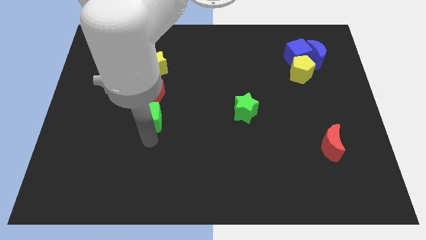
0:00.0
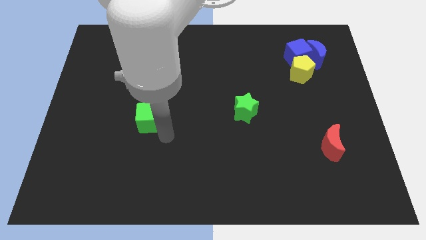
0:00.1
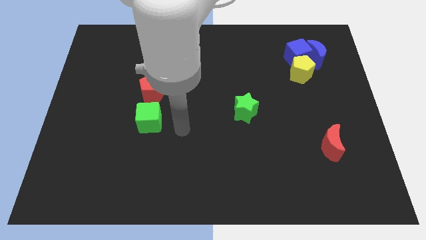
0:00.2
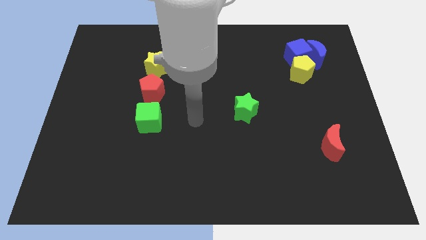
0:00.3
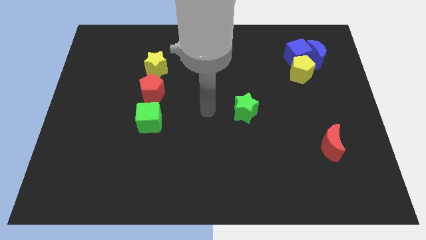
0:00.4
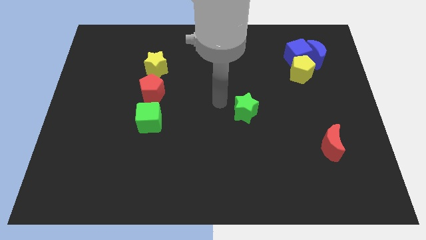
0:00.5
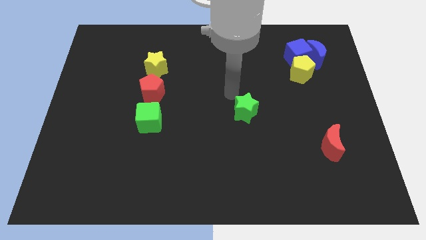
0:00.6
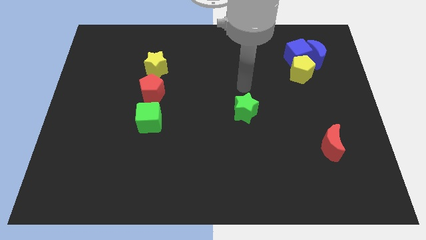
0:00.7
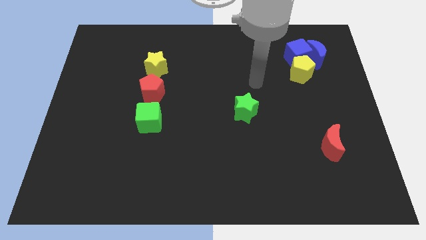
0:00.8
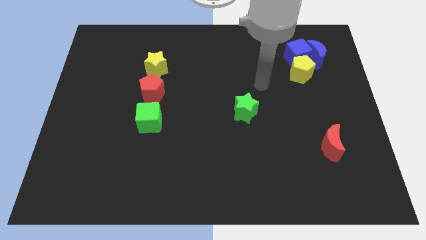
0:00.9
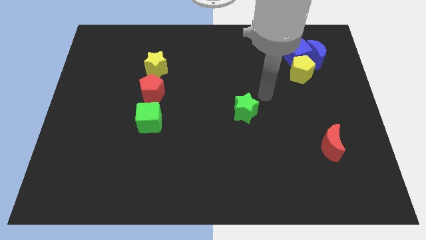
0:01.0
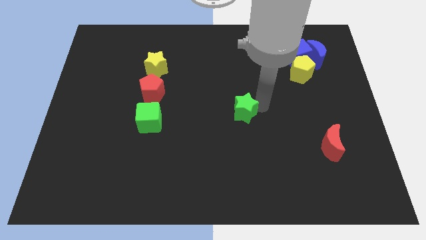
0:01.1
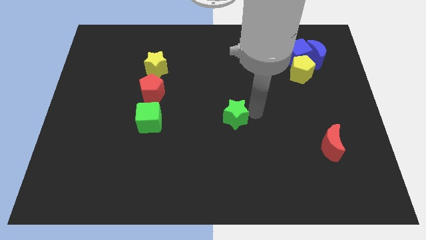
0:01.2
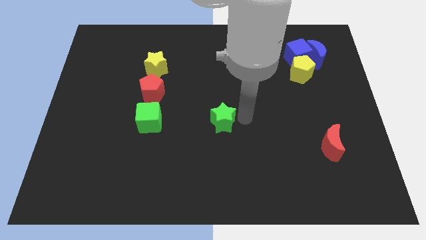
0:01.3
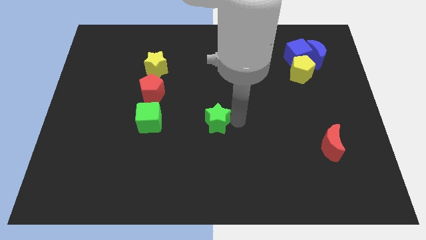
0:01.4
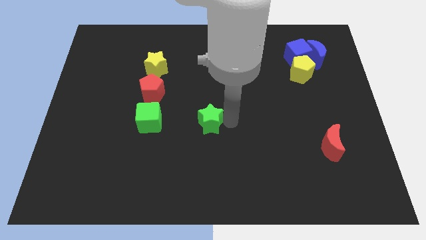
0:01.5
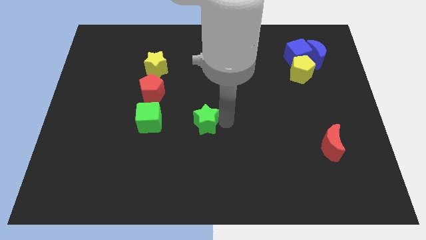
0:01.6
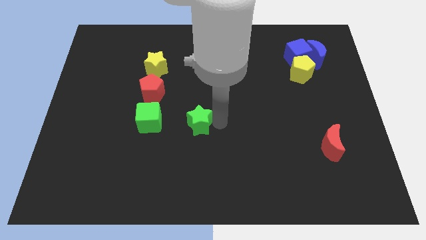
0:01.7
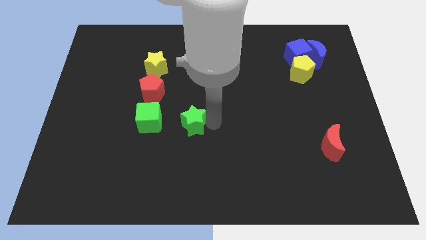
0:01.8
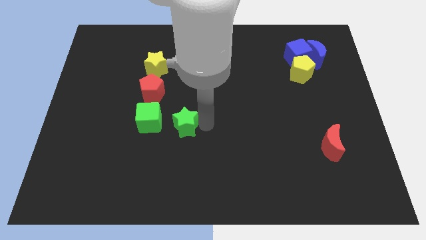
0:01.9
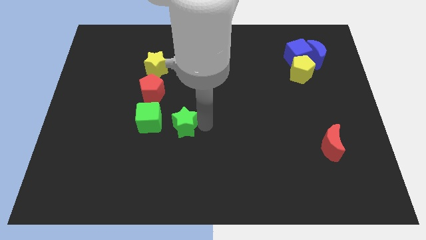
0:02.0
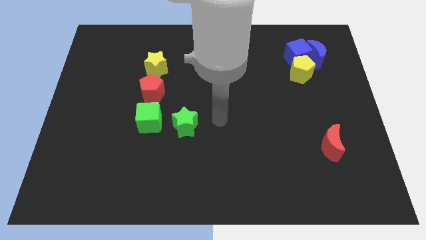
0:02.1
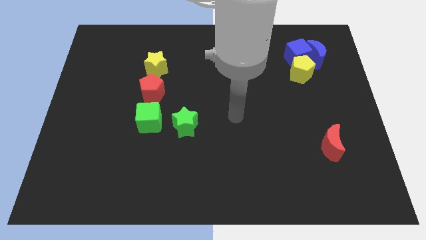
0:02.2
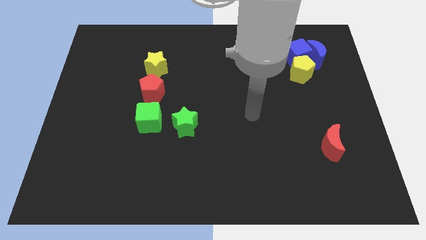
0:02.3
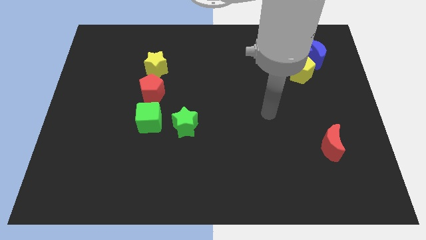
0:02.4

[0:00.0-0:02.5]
move the green star to the right of the green cube

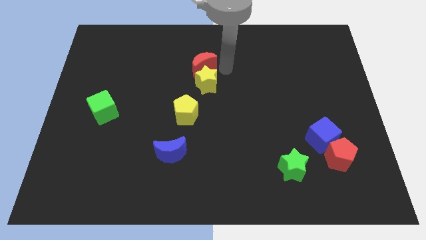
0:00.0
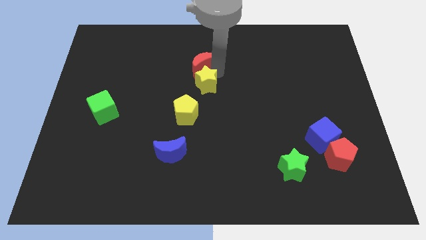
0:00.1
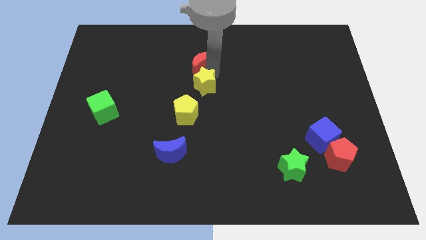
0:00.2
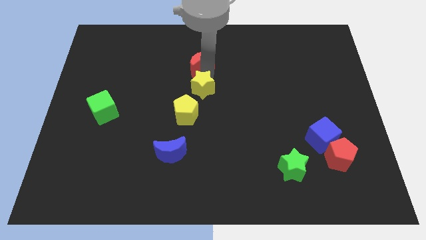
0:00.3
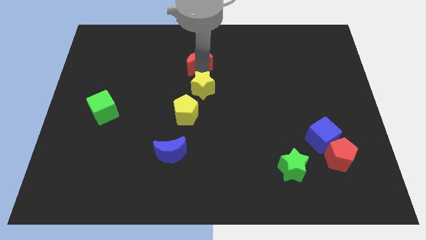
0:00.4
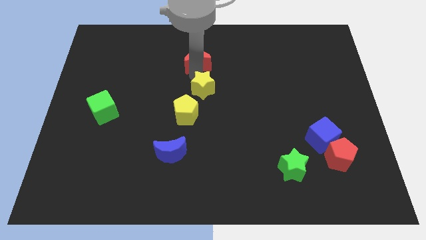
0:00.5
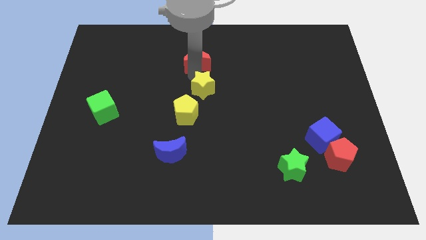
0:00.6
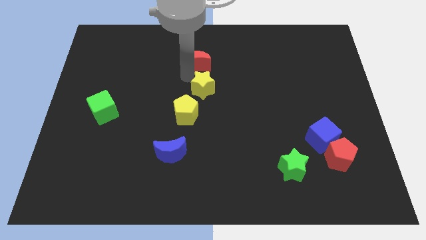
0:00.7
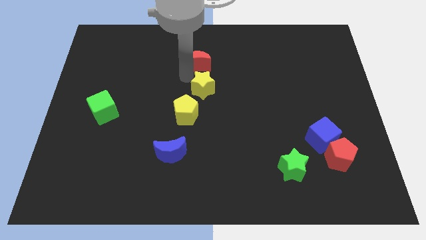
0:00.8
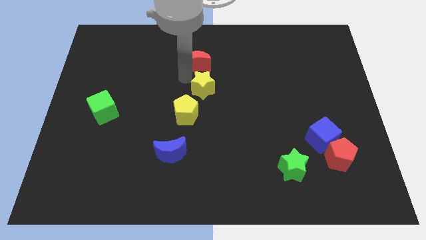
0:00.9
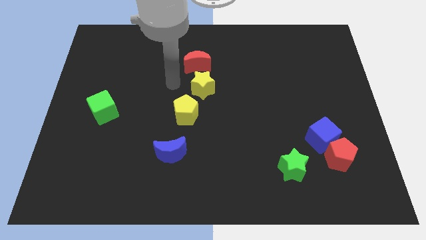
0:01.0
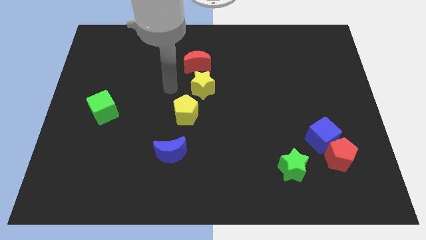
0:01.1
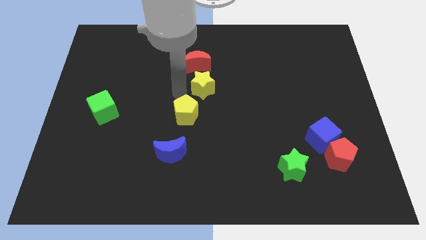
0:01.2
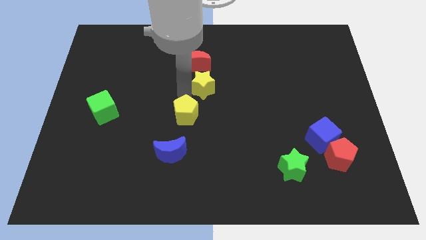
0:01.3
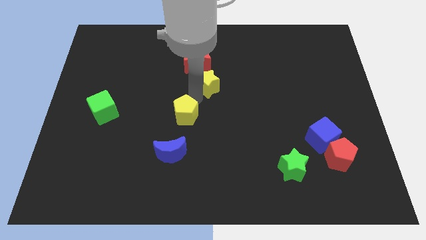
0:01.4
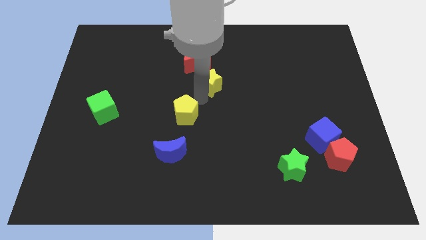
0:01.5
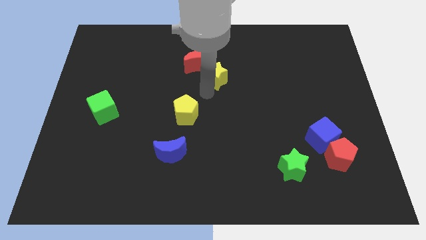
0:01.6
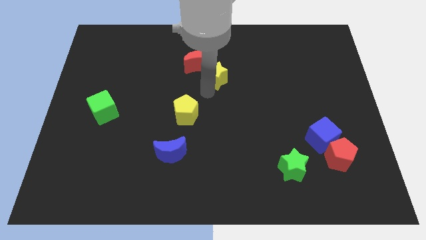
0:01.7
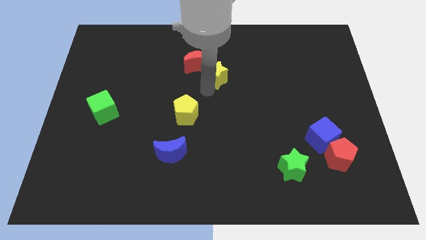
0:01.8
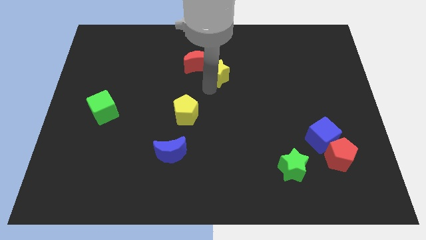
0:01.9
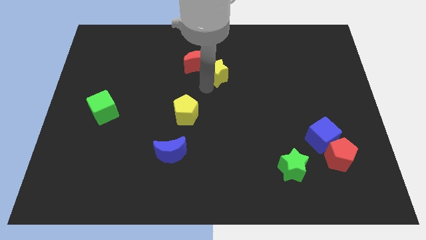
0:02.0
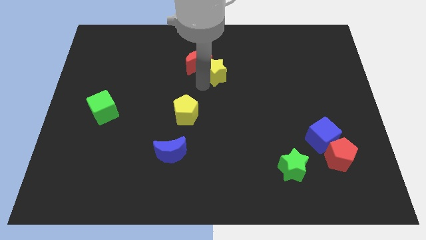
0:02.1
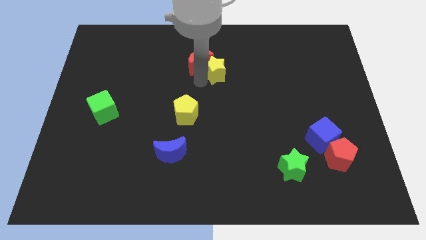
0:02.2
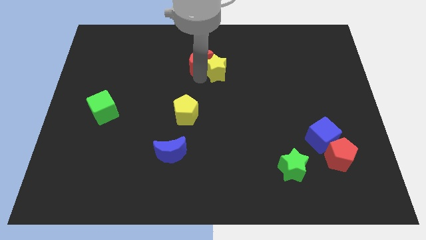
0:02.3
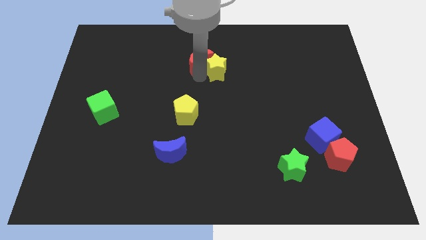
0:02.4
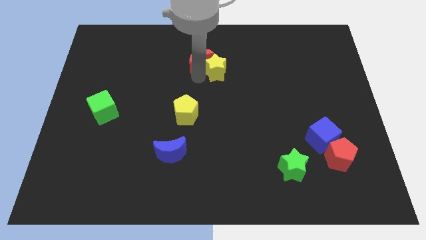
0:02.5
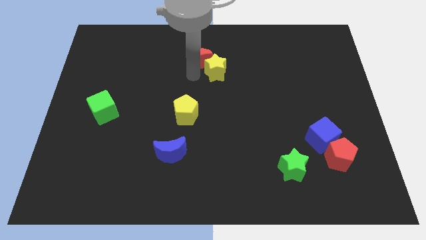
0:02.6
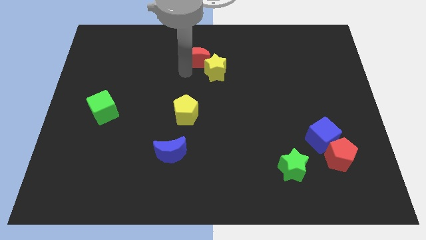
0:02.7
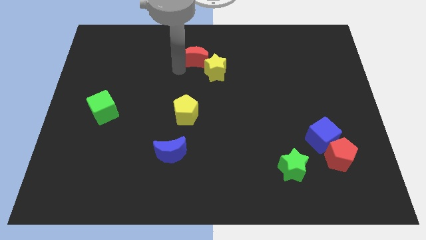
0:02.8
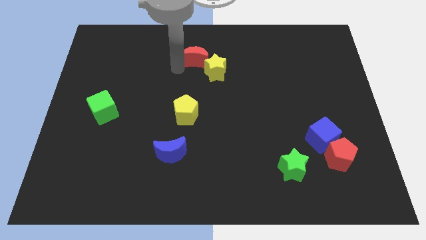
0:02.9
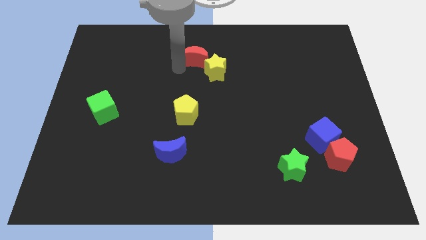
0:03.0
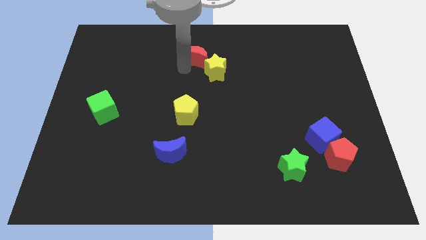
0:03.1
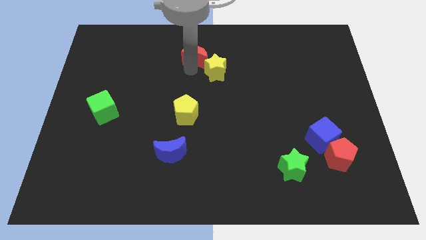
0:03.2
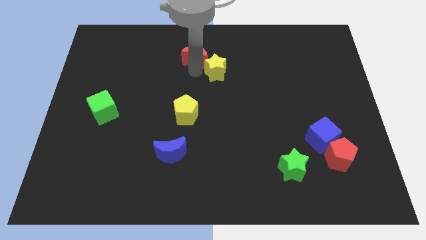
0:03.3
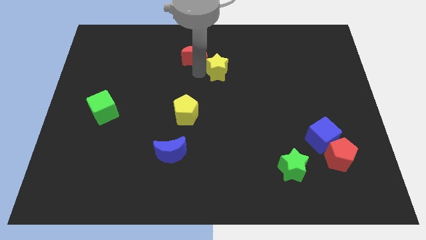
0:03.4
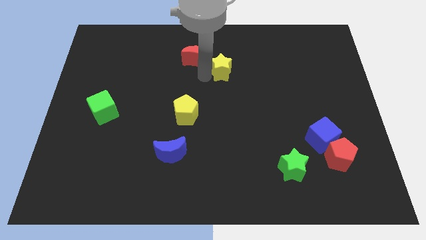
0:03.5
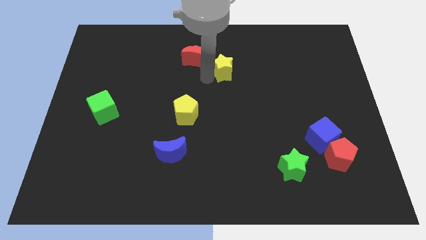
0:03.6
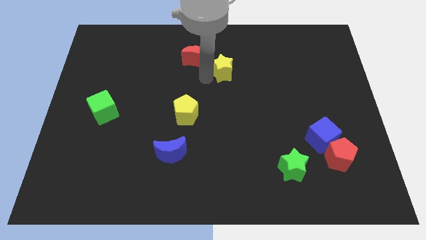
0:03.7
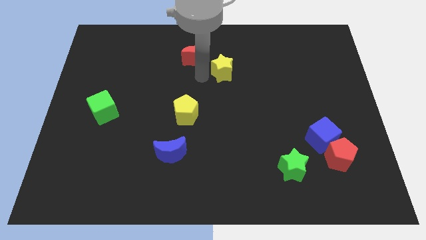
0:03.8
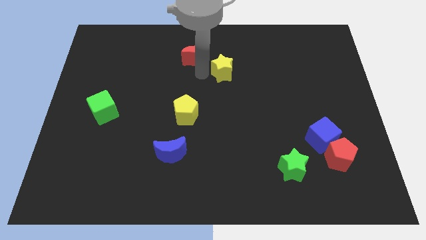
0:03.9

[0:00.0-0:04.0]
separate yellow star and the red moon

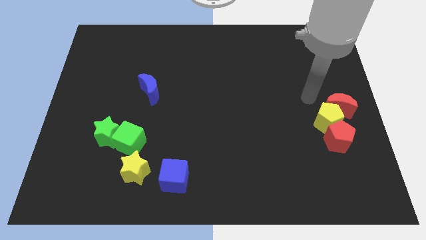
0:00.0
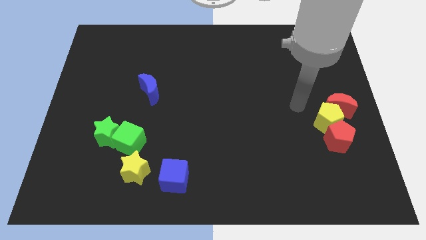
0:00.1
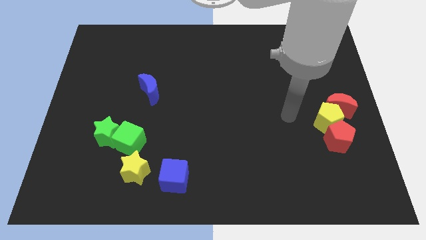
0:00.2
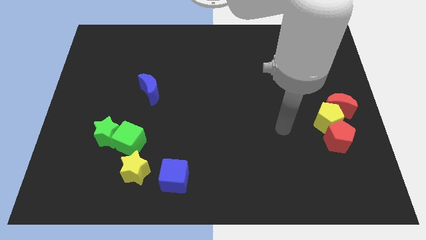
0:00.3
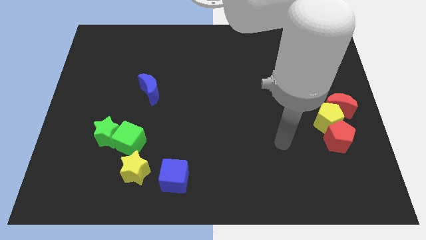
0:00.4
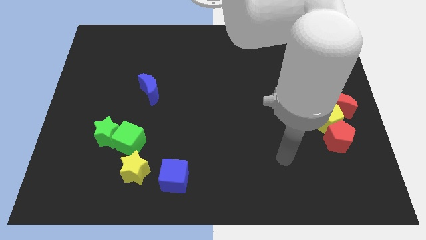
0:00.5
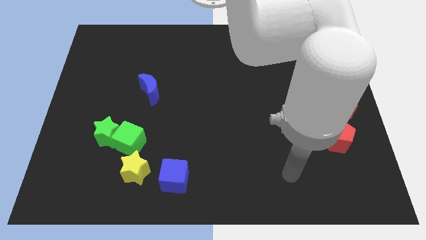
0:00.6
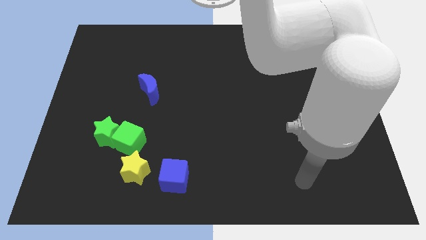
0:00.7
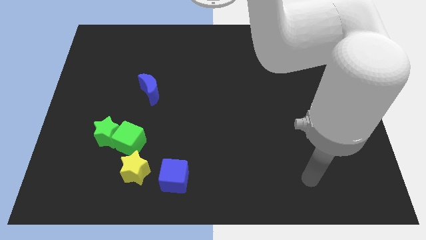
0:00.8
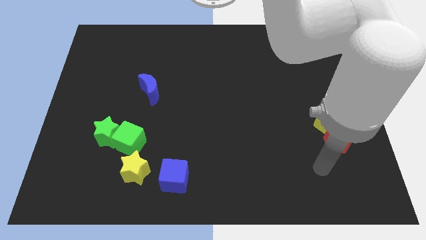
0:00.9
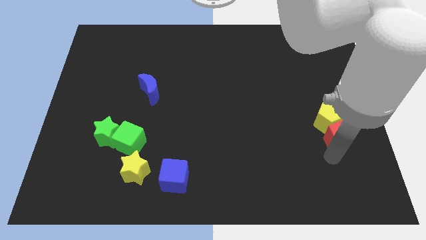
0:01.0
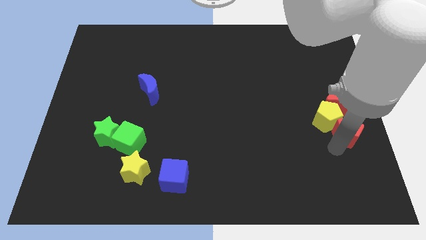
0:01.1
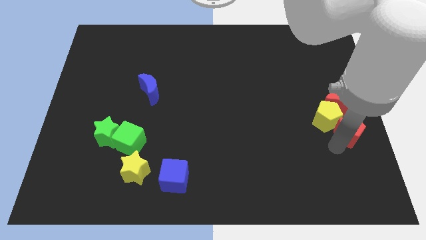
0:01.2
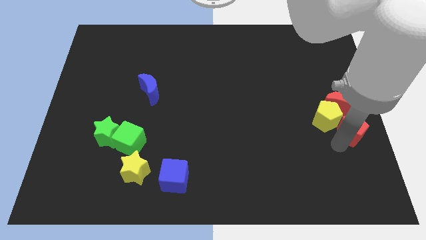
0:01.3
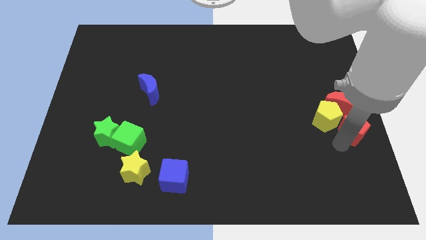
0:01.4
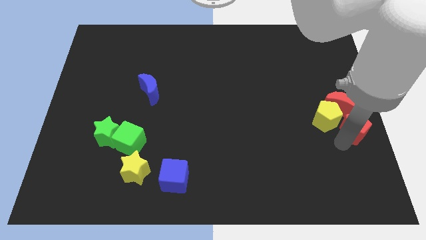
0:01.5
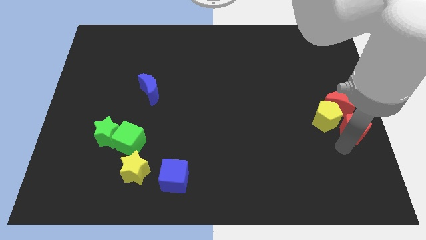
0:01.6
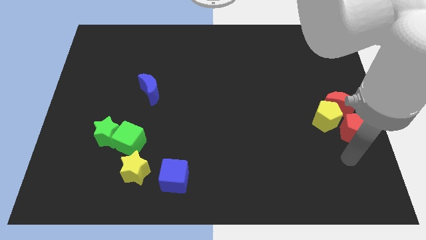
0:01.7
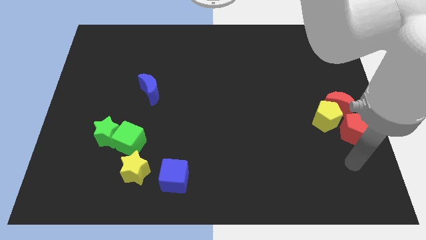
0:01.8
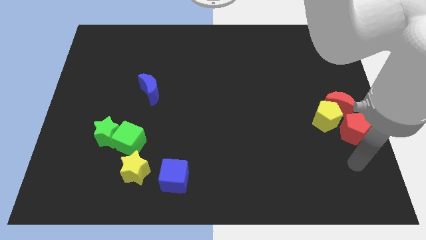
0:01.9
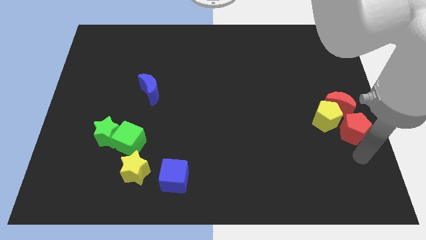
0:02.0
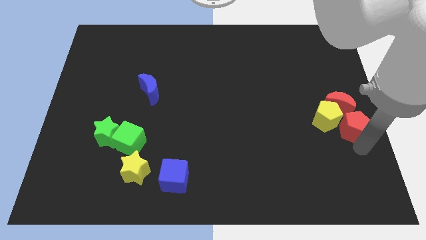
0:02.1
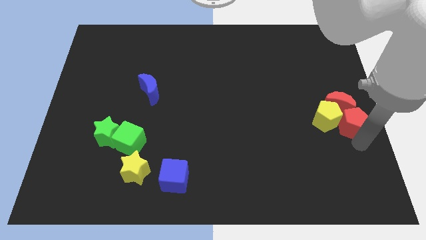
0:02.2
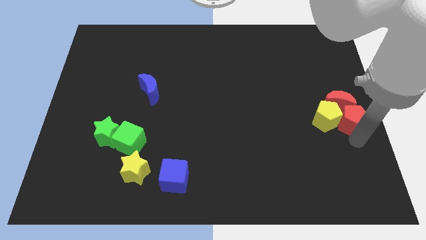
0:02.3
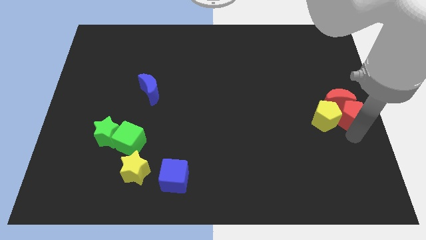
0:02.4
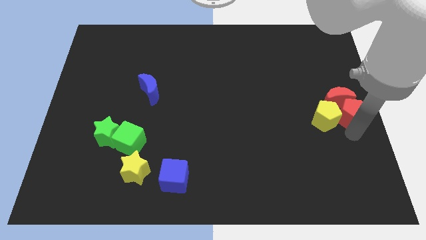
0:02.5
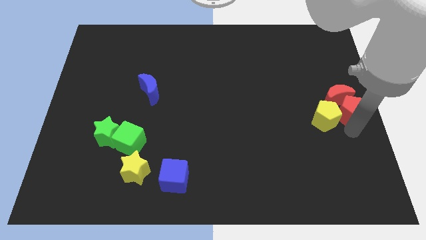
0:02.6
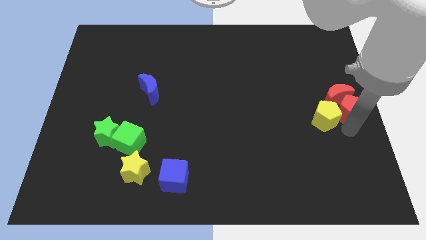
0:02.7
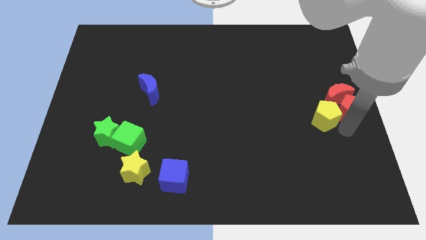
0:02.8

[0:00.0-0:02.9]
move the red pentagon into the red crescent
